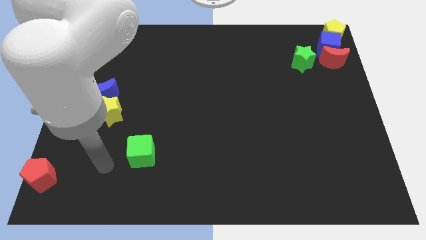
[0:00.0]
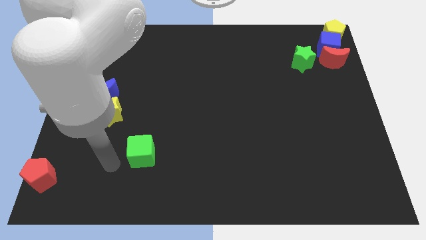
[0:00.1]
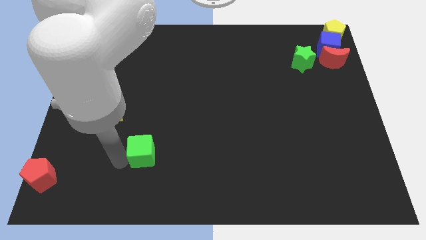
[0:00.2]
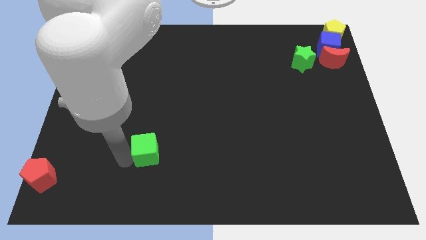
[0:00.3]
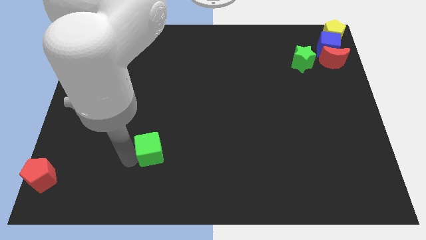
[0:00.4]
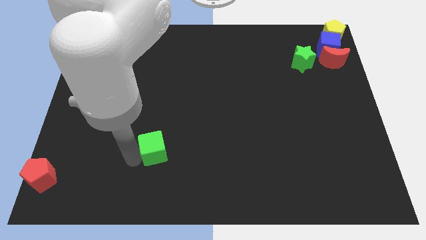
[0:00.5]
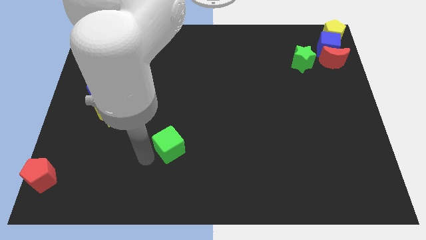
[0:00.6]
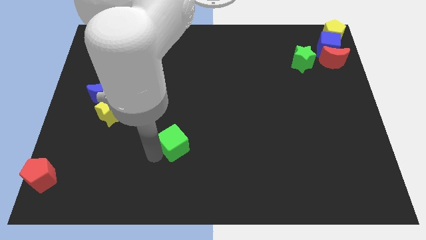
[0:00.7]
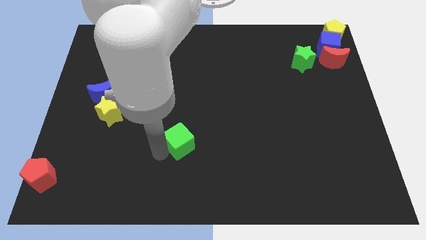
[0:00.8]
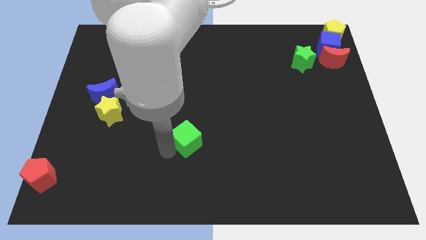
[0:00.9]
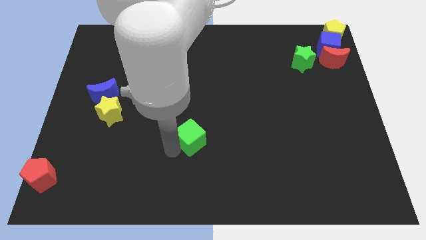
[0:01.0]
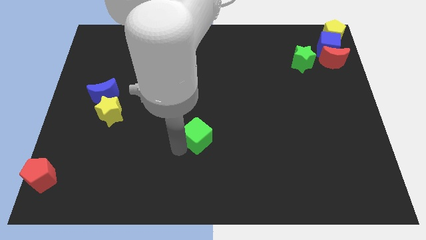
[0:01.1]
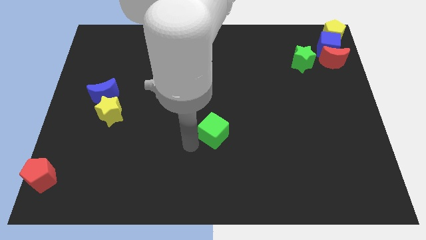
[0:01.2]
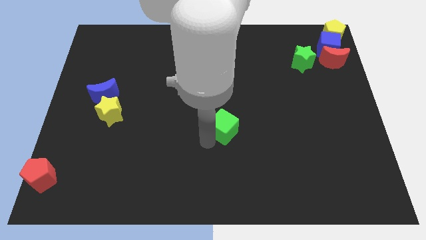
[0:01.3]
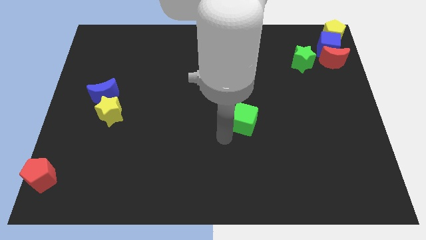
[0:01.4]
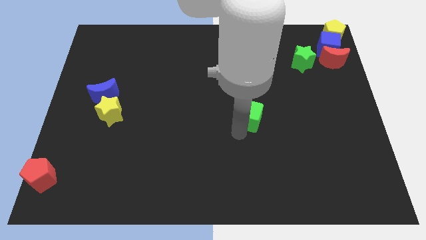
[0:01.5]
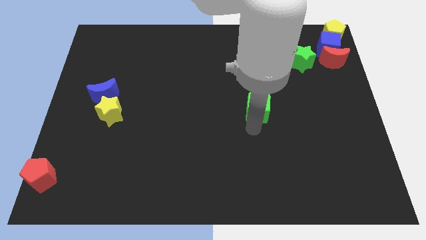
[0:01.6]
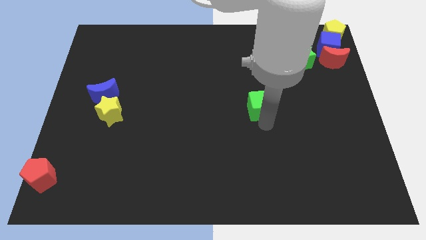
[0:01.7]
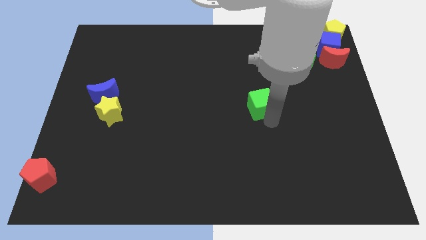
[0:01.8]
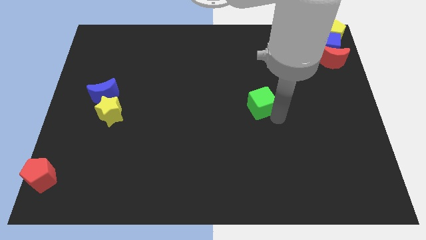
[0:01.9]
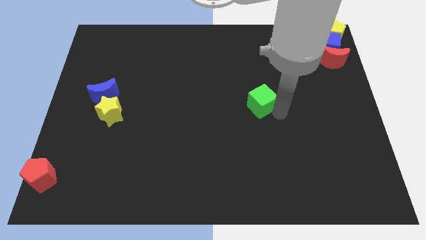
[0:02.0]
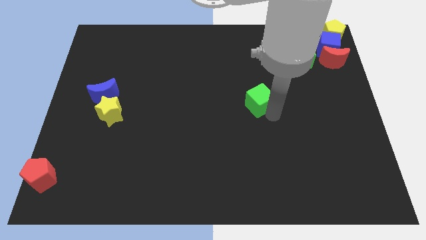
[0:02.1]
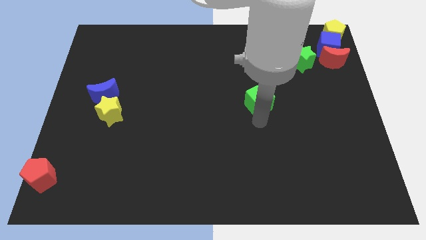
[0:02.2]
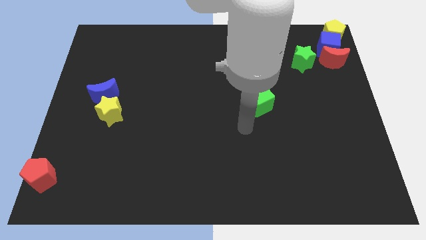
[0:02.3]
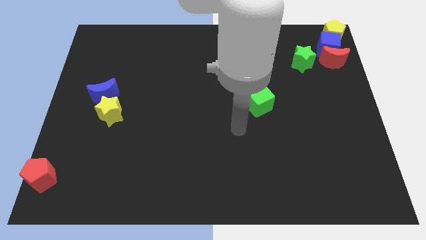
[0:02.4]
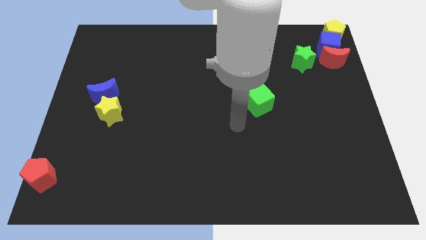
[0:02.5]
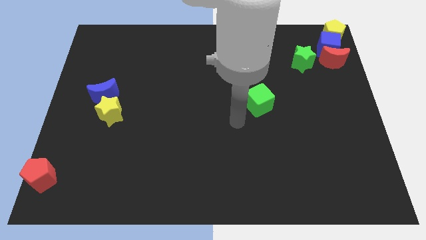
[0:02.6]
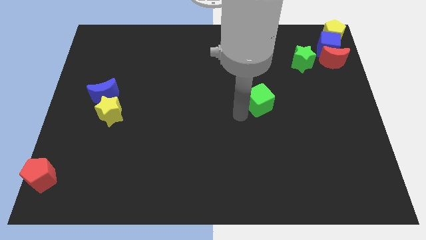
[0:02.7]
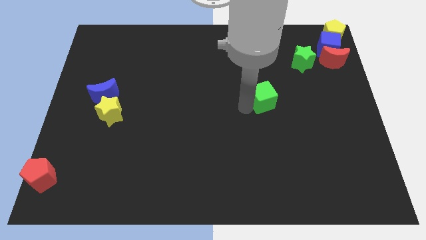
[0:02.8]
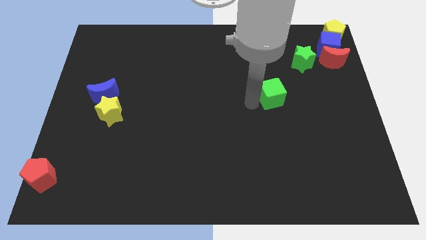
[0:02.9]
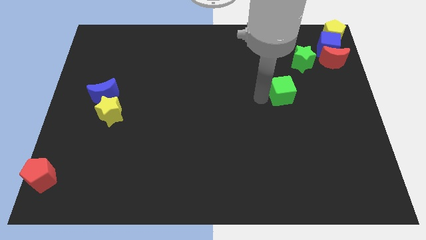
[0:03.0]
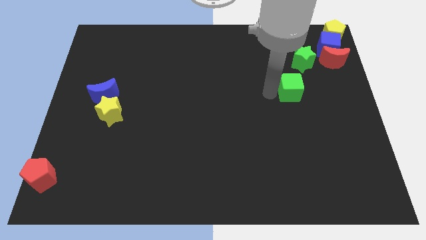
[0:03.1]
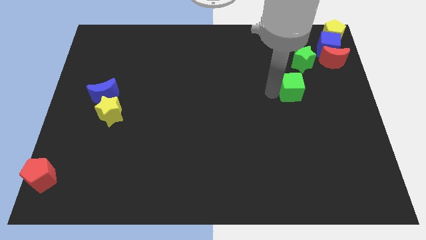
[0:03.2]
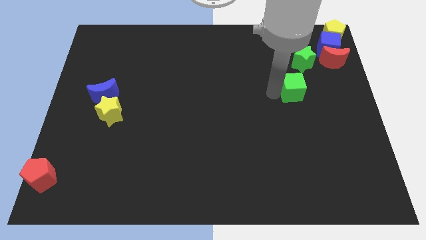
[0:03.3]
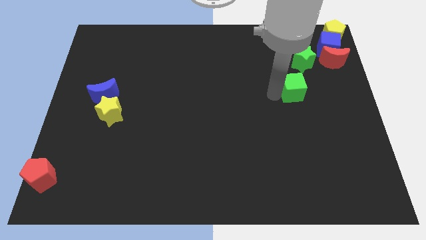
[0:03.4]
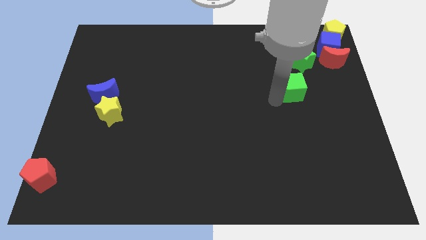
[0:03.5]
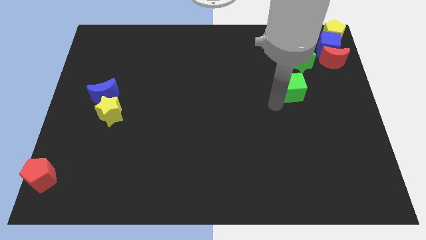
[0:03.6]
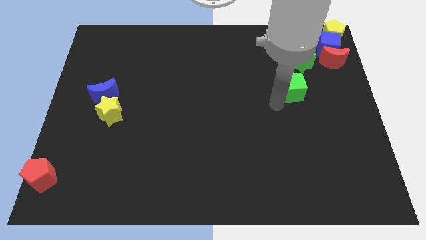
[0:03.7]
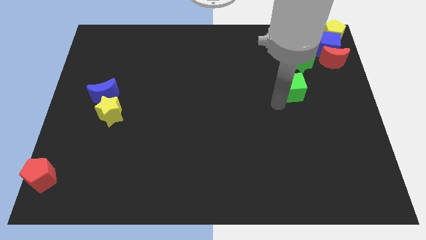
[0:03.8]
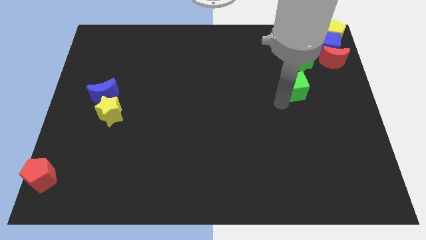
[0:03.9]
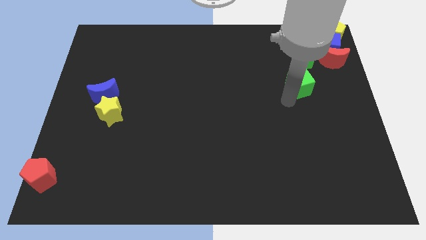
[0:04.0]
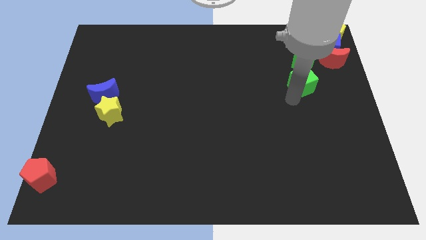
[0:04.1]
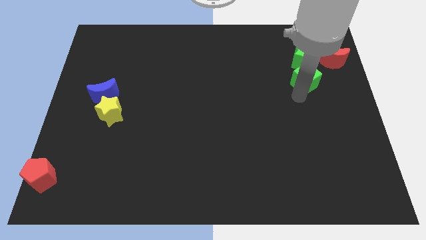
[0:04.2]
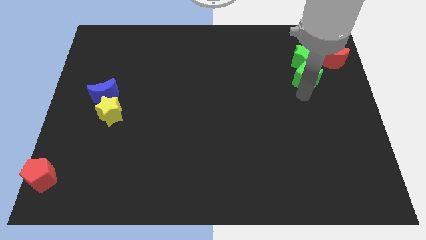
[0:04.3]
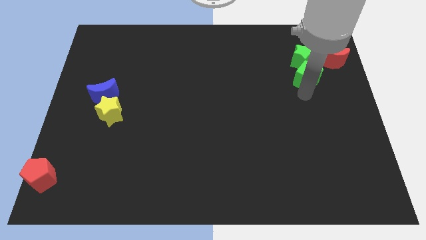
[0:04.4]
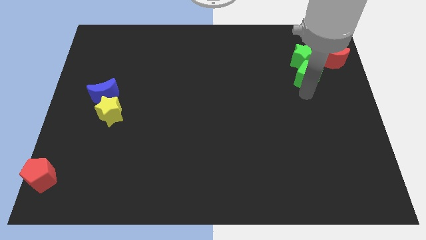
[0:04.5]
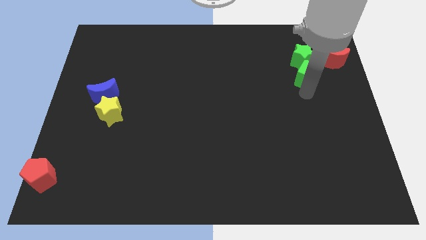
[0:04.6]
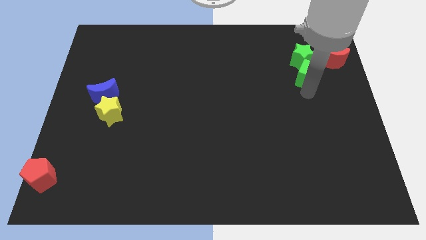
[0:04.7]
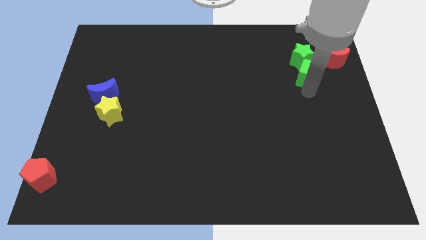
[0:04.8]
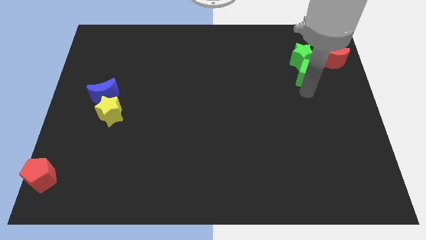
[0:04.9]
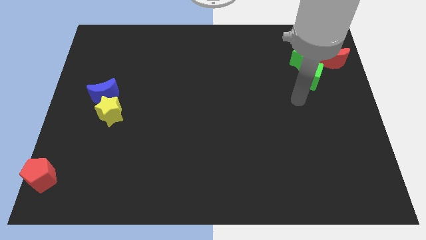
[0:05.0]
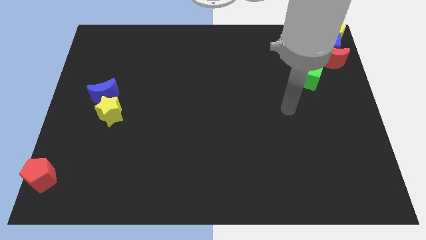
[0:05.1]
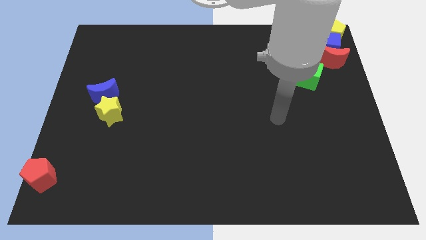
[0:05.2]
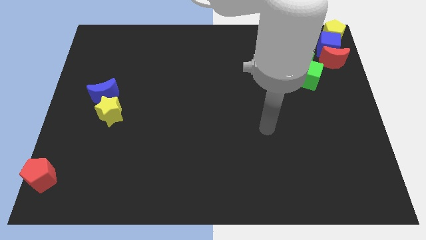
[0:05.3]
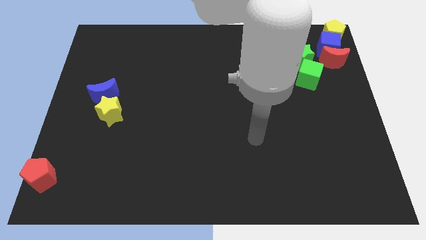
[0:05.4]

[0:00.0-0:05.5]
push the green cube to the group of blocks

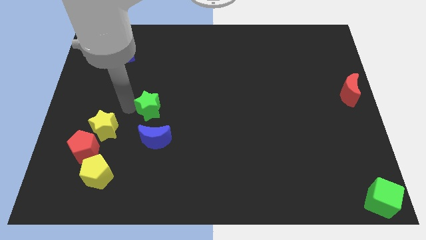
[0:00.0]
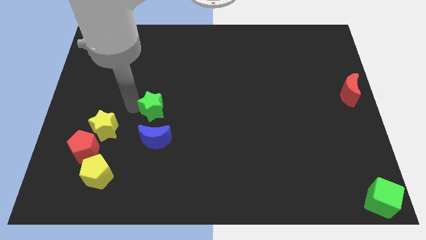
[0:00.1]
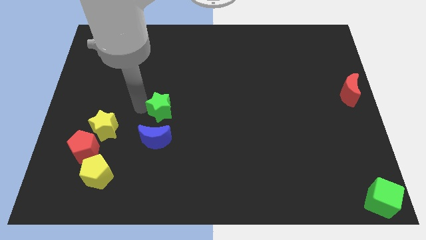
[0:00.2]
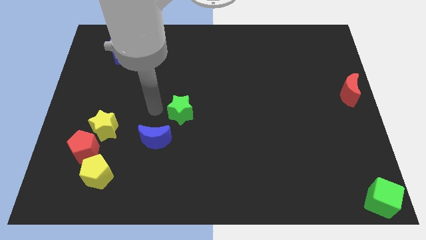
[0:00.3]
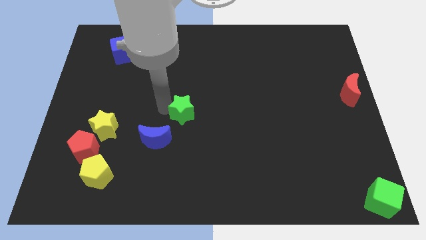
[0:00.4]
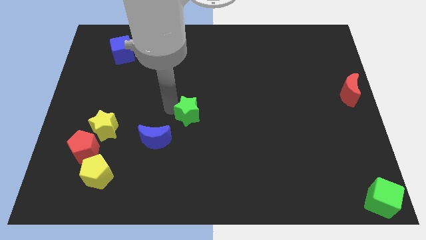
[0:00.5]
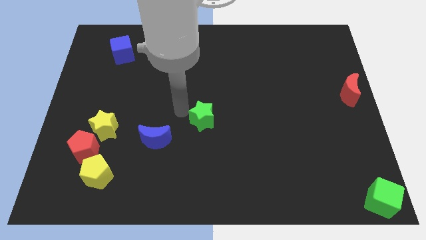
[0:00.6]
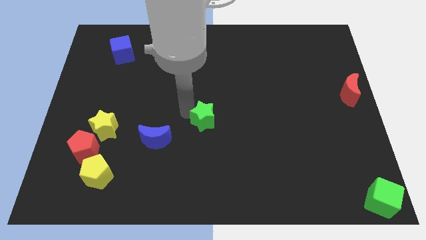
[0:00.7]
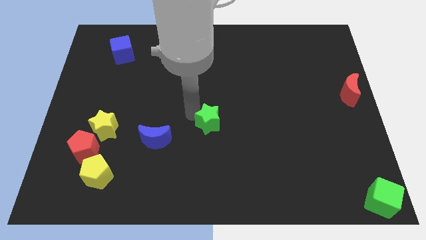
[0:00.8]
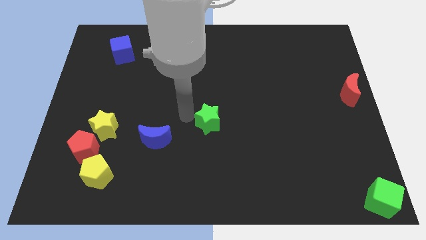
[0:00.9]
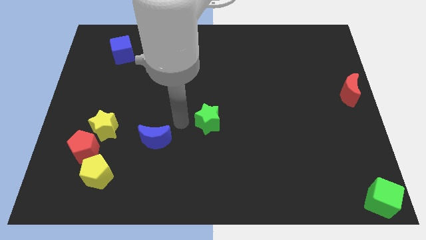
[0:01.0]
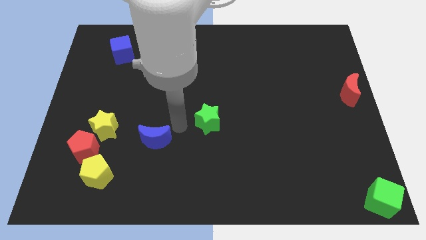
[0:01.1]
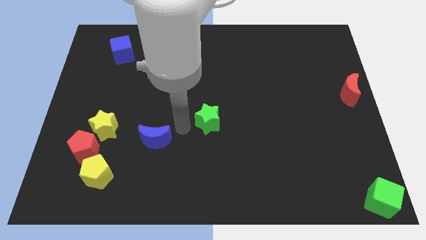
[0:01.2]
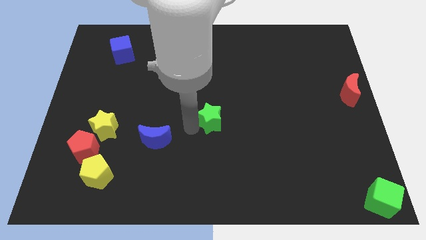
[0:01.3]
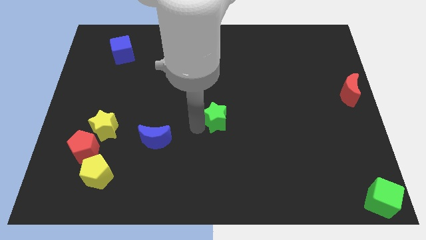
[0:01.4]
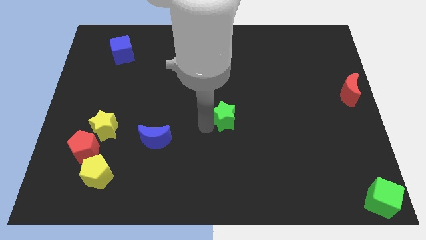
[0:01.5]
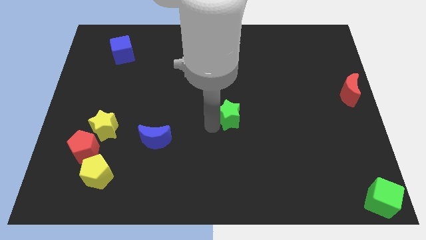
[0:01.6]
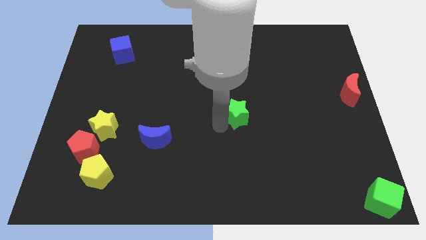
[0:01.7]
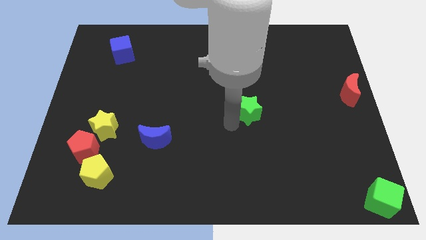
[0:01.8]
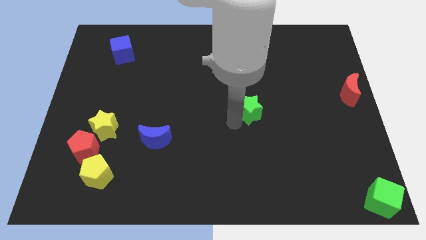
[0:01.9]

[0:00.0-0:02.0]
place the green star in between the red moon and blue moon

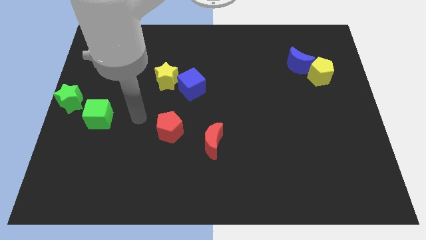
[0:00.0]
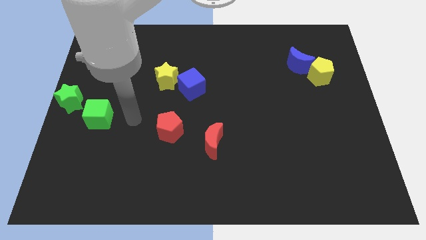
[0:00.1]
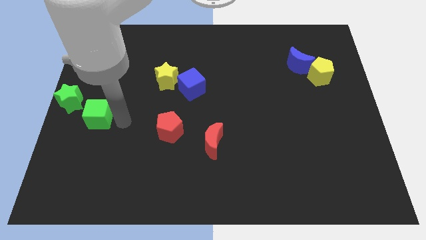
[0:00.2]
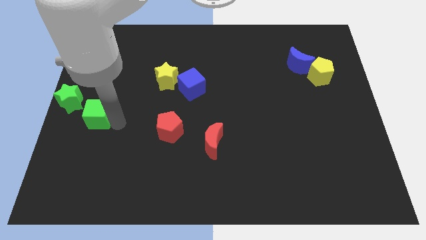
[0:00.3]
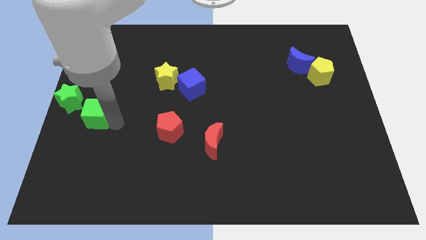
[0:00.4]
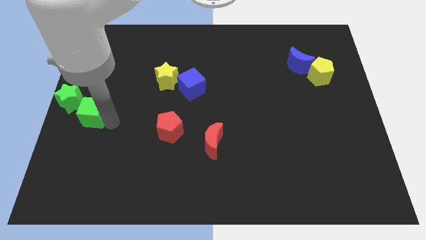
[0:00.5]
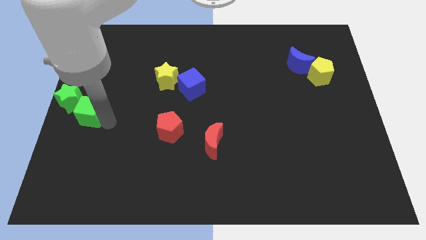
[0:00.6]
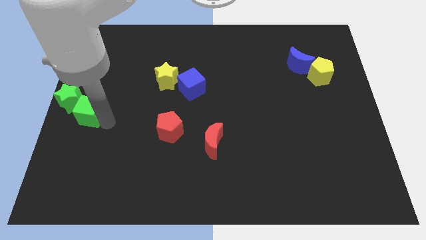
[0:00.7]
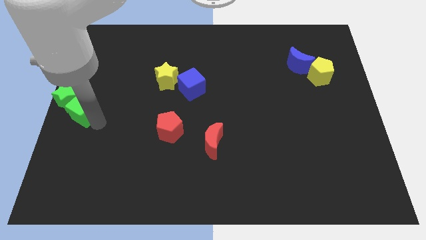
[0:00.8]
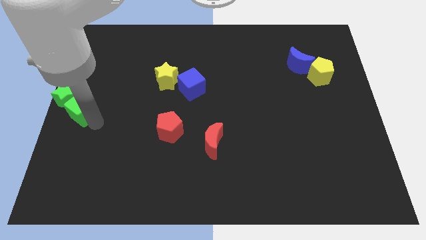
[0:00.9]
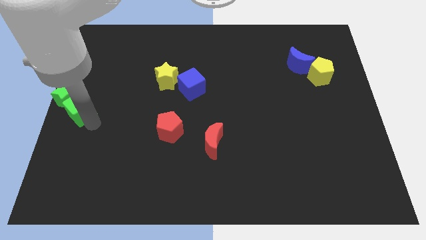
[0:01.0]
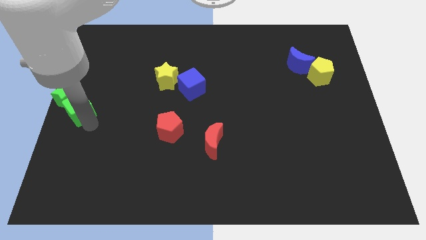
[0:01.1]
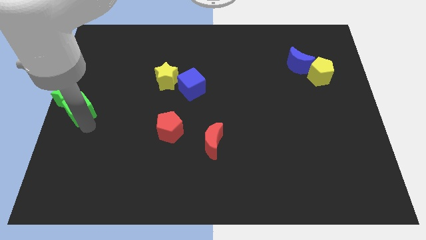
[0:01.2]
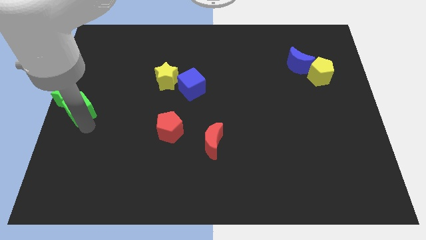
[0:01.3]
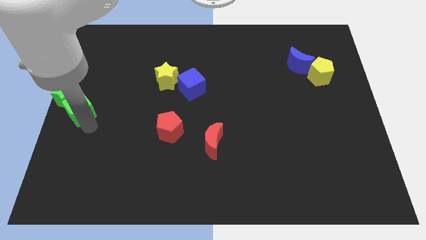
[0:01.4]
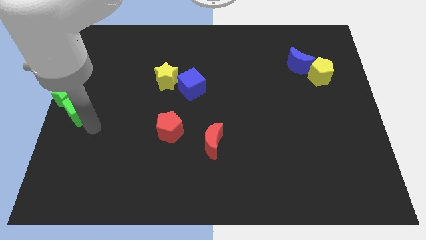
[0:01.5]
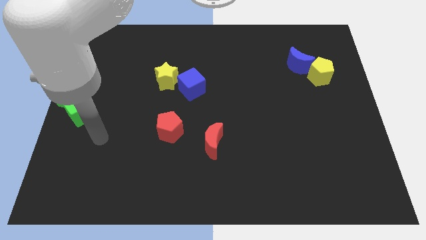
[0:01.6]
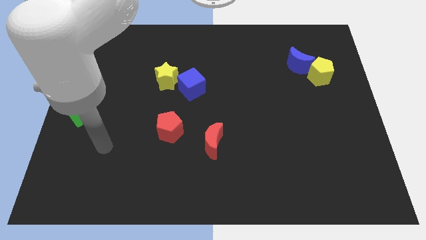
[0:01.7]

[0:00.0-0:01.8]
move the green cube close to the green star
